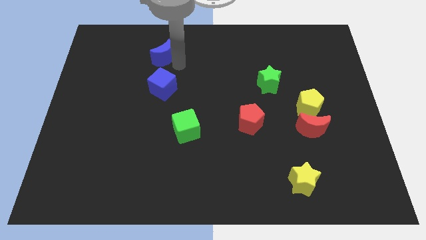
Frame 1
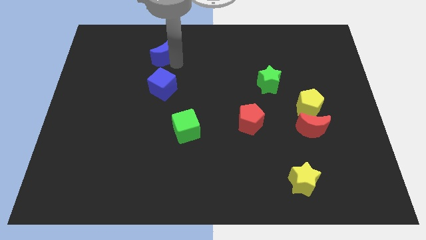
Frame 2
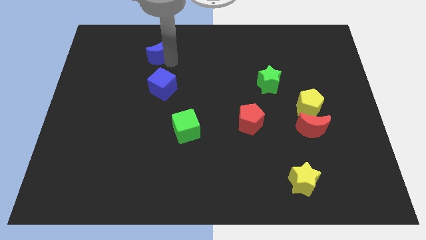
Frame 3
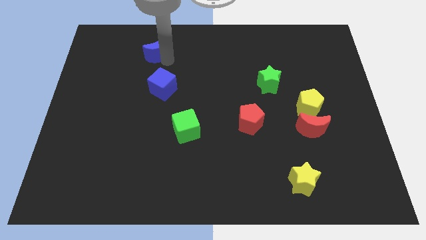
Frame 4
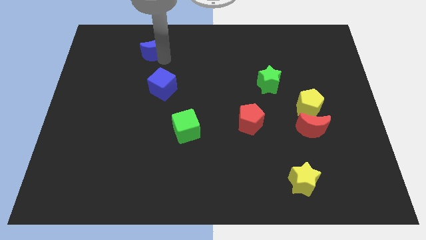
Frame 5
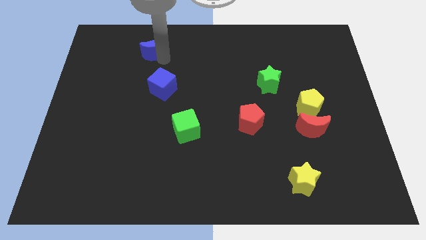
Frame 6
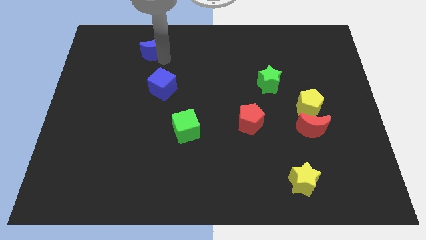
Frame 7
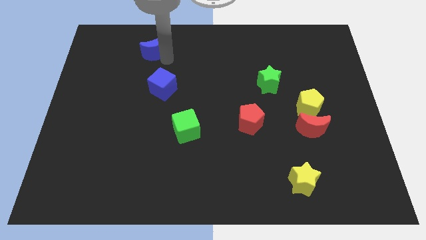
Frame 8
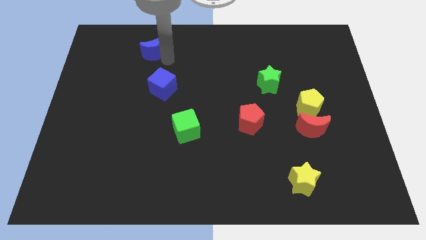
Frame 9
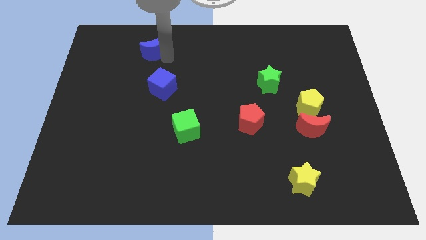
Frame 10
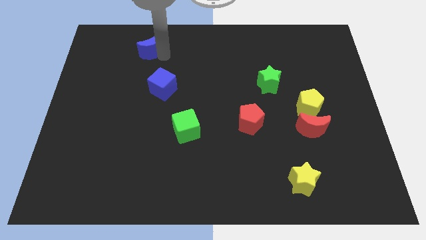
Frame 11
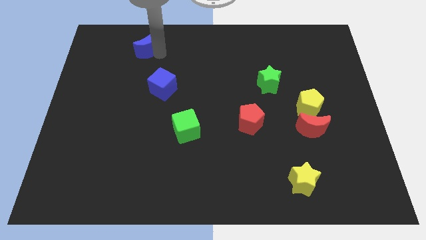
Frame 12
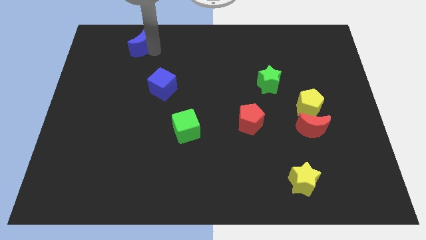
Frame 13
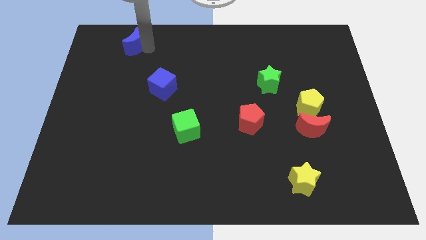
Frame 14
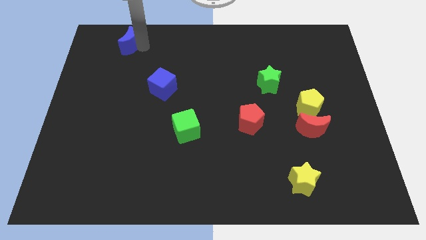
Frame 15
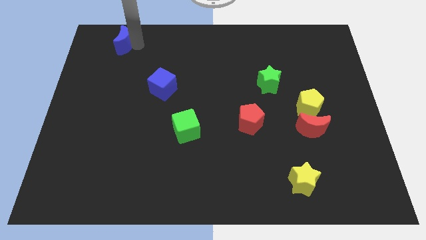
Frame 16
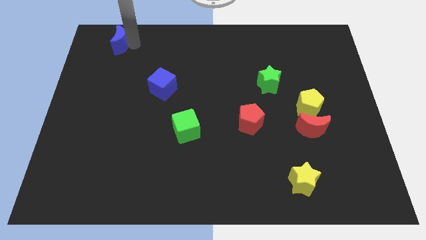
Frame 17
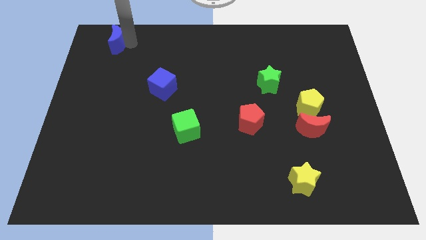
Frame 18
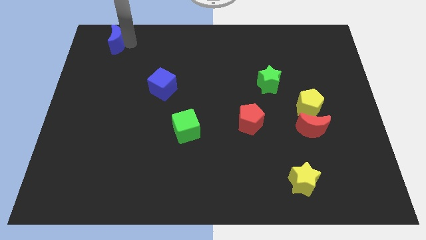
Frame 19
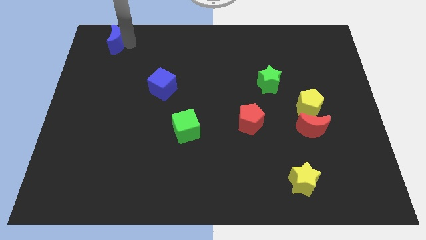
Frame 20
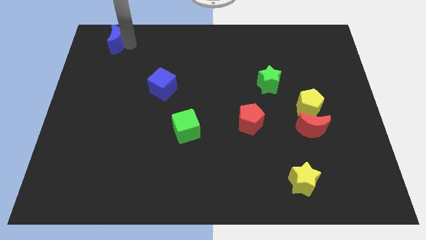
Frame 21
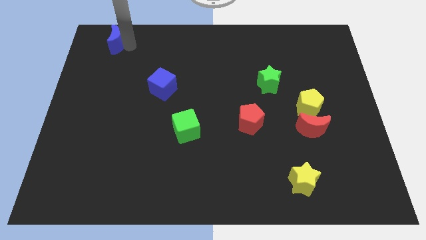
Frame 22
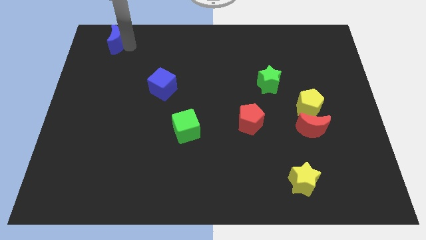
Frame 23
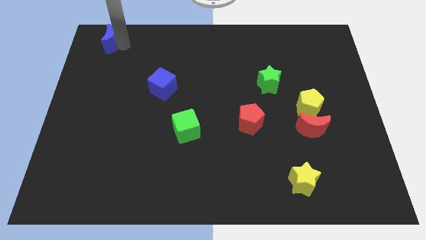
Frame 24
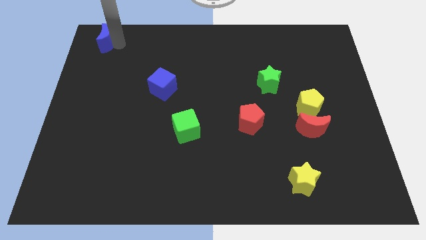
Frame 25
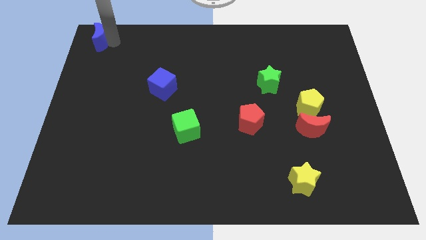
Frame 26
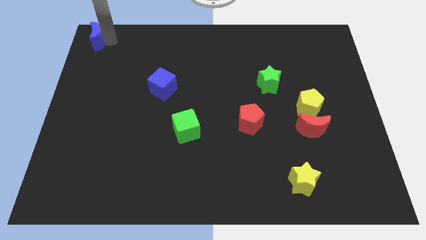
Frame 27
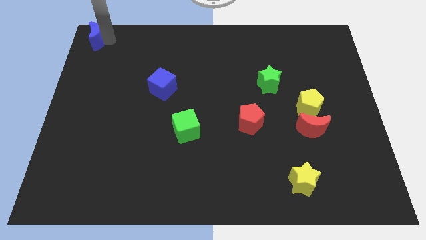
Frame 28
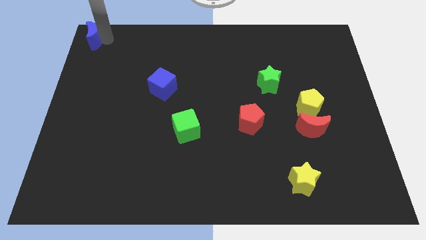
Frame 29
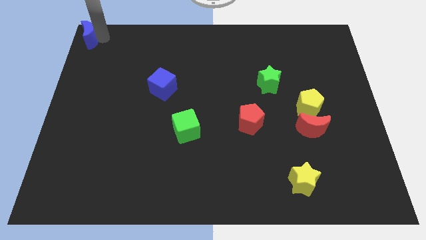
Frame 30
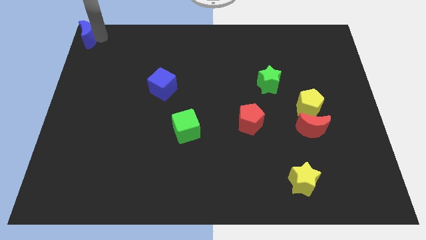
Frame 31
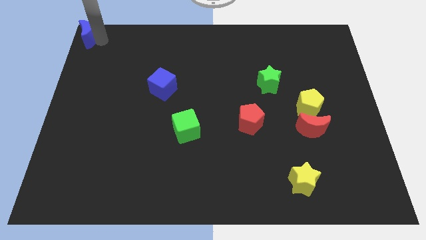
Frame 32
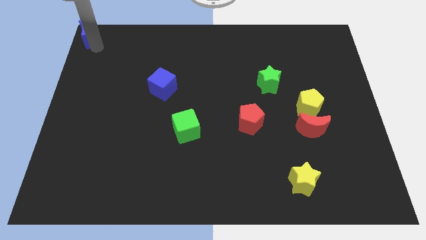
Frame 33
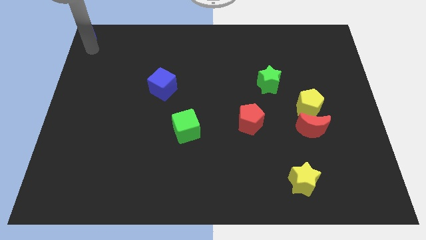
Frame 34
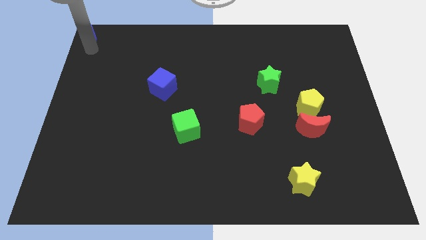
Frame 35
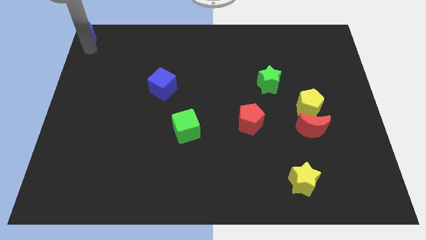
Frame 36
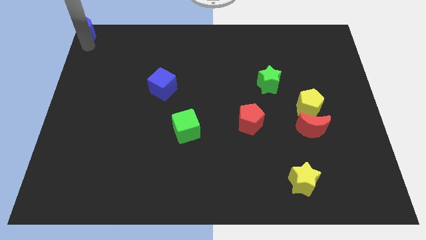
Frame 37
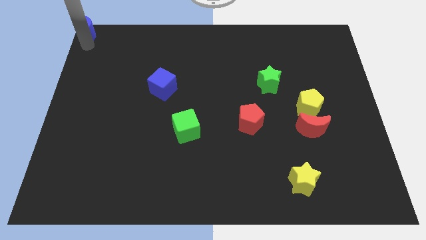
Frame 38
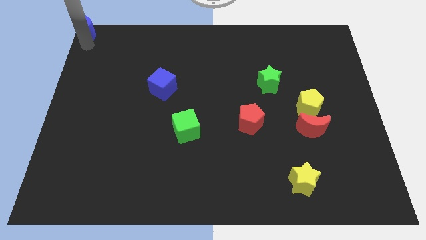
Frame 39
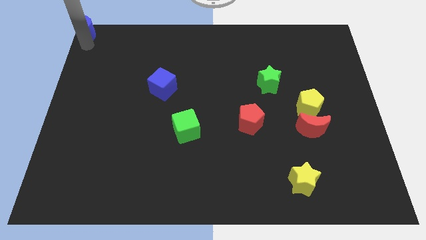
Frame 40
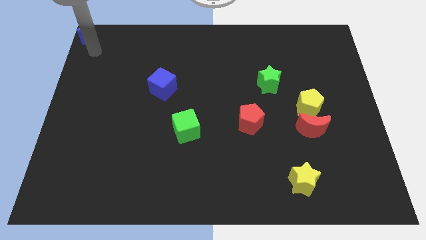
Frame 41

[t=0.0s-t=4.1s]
push blue moon to the top left corner

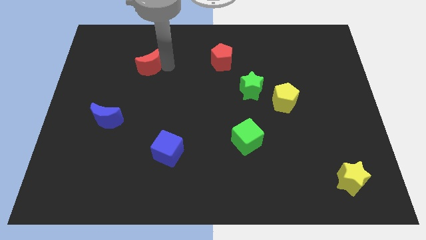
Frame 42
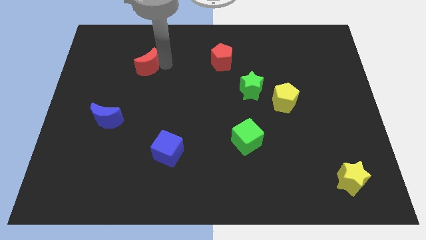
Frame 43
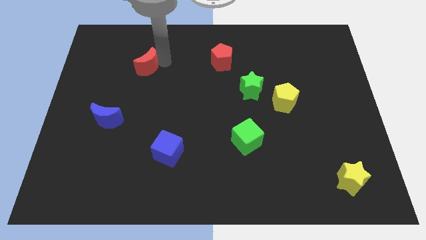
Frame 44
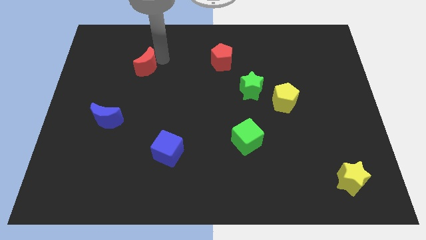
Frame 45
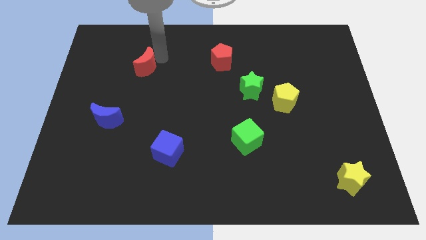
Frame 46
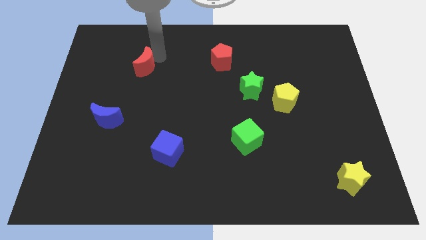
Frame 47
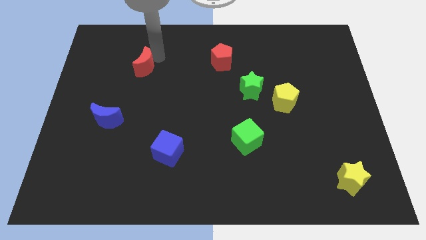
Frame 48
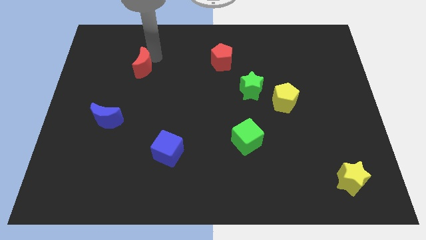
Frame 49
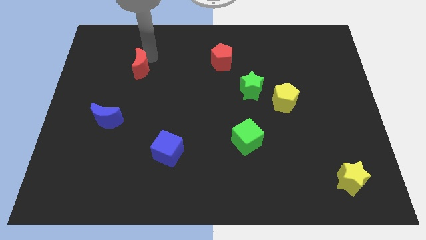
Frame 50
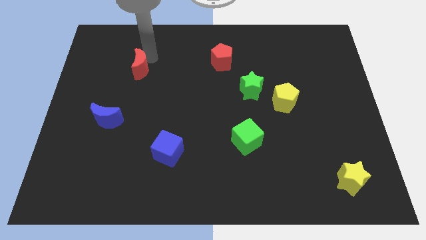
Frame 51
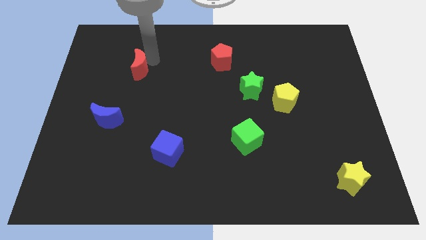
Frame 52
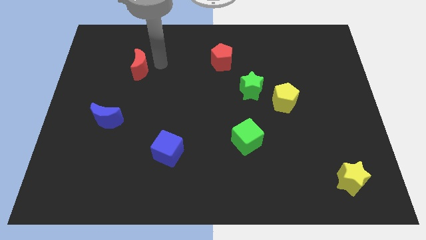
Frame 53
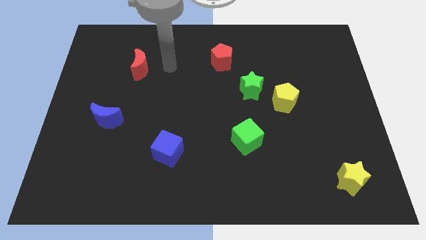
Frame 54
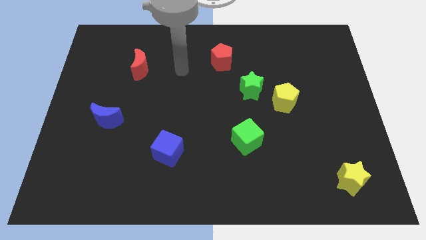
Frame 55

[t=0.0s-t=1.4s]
slightly push the red moon towards the left side of the board

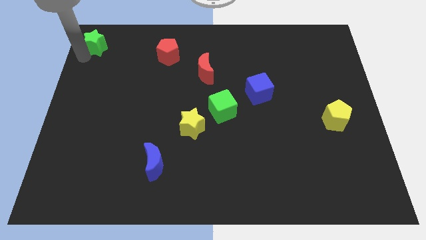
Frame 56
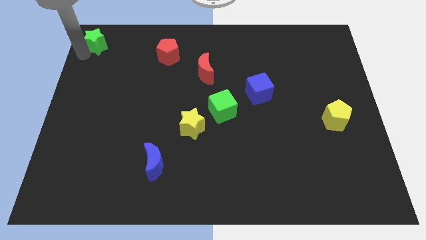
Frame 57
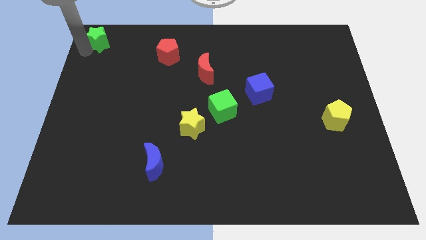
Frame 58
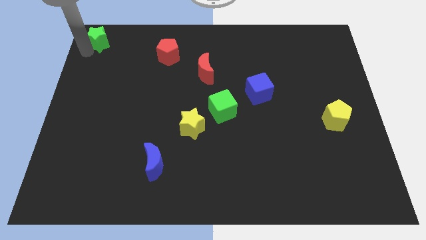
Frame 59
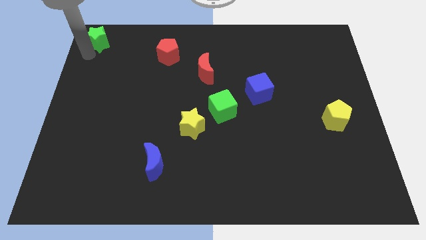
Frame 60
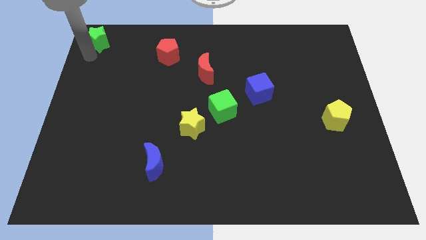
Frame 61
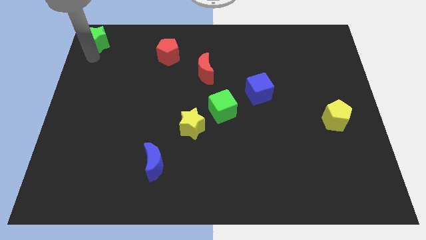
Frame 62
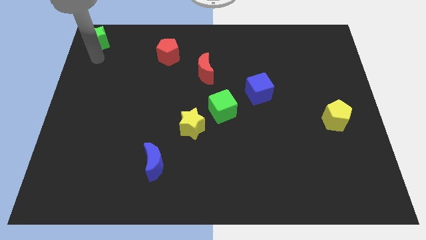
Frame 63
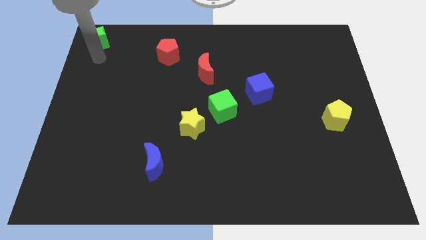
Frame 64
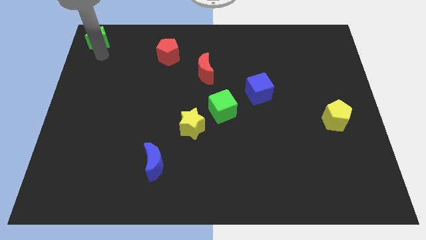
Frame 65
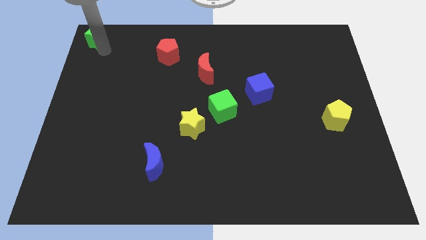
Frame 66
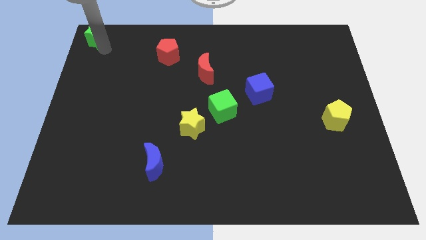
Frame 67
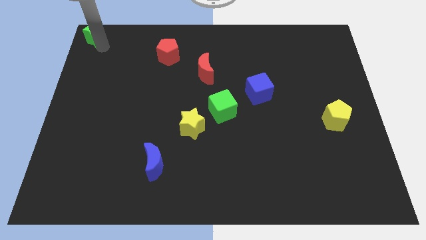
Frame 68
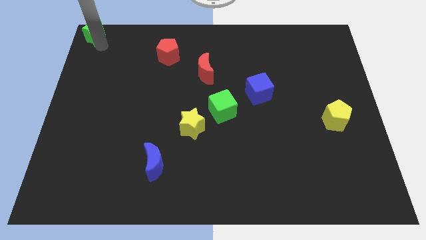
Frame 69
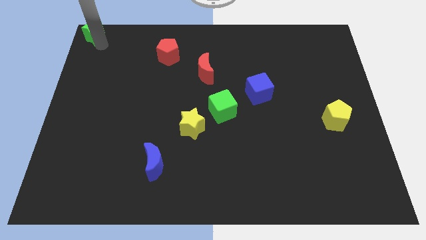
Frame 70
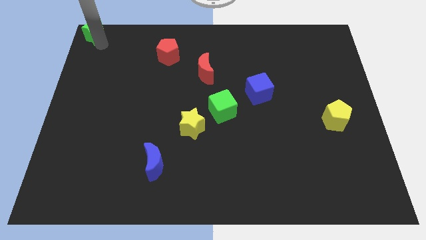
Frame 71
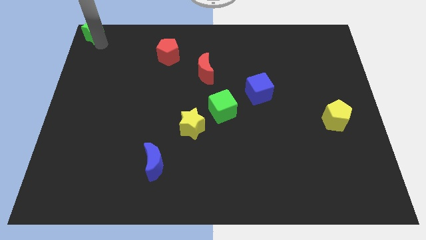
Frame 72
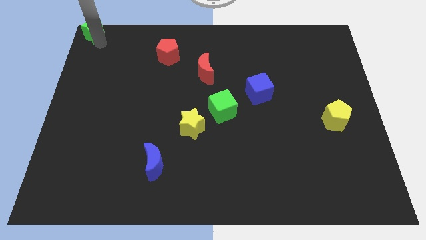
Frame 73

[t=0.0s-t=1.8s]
push green star to the top left corner

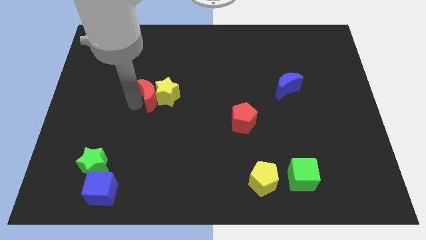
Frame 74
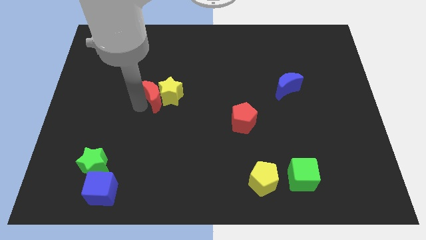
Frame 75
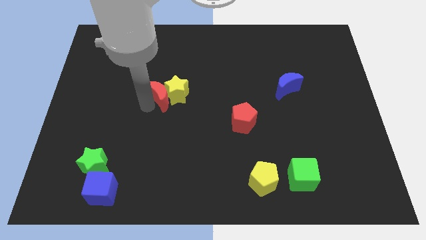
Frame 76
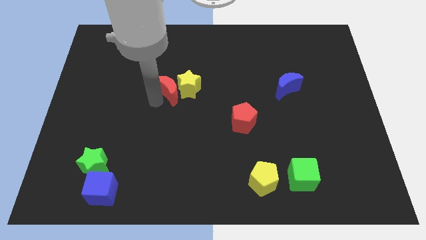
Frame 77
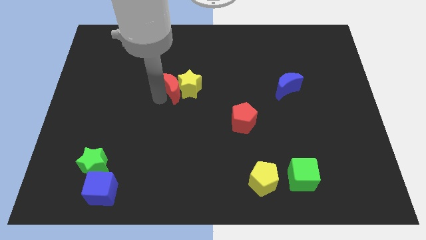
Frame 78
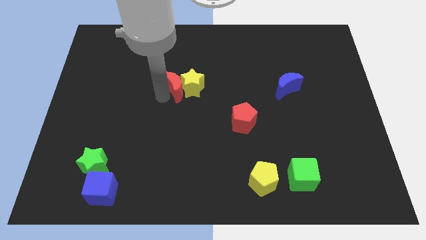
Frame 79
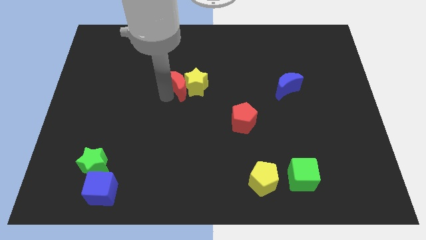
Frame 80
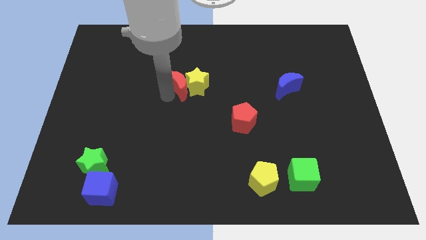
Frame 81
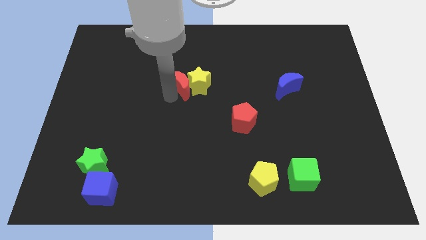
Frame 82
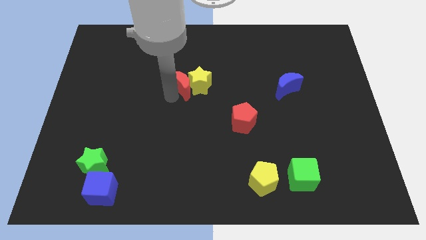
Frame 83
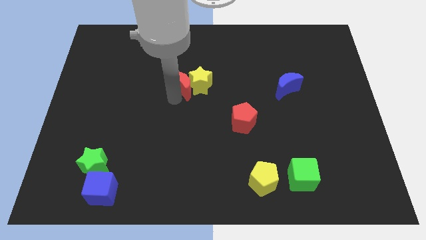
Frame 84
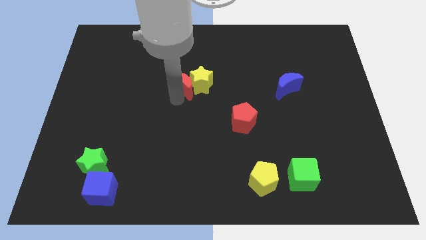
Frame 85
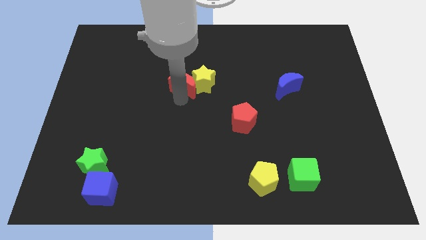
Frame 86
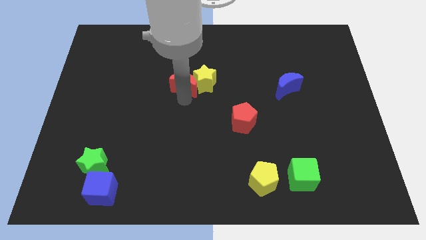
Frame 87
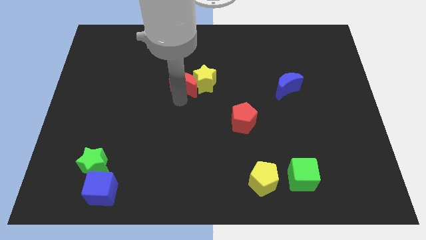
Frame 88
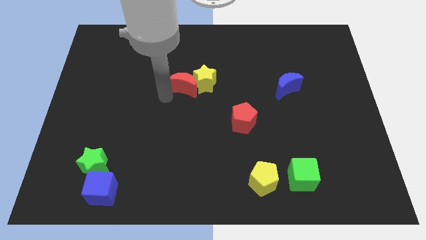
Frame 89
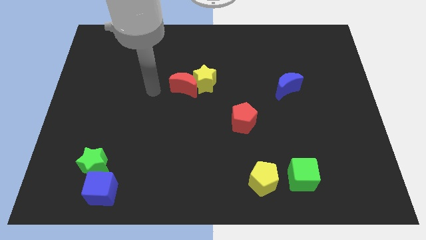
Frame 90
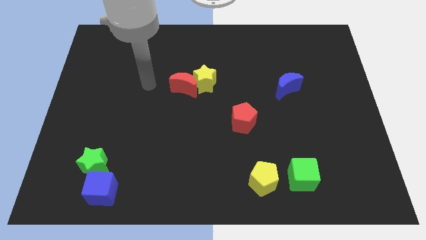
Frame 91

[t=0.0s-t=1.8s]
place the red moon and yellow star towards the center of the board
